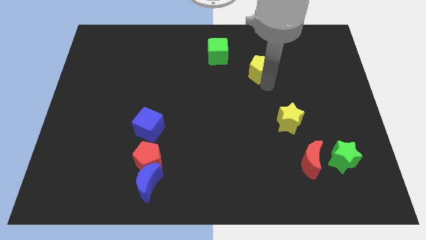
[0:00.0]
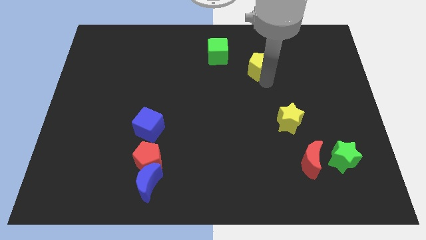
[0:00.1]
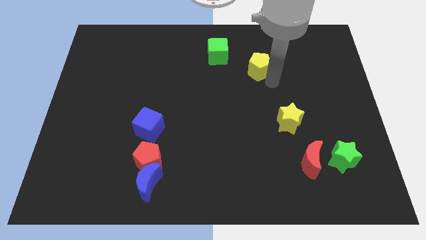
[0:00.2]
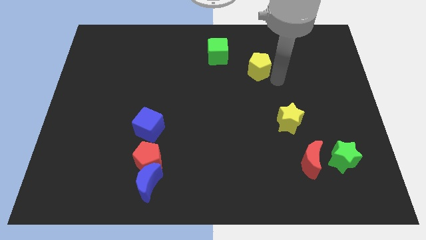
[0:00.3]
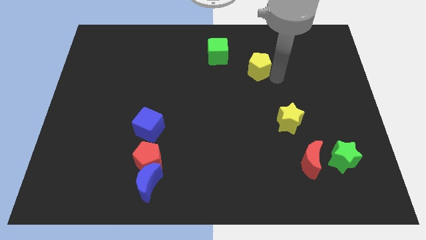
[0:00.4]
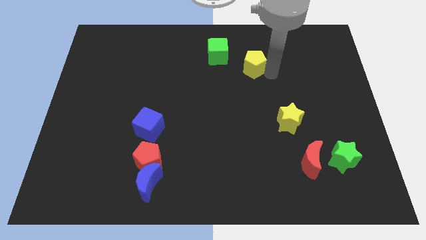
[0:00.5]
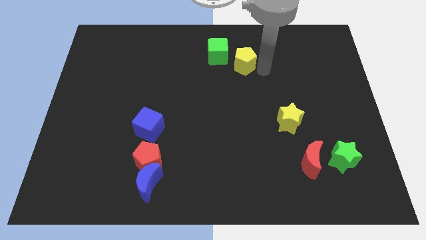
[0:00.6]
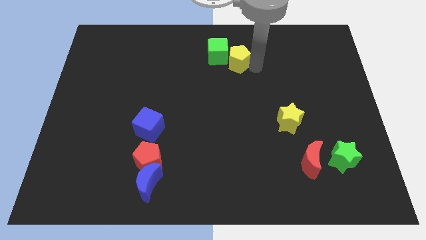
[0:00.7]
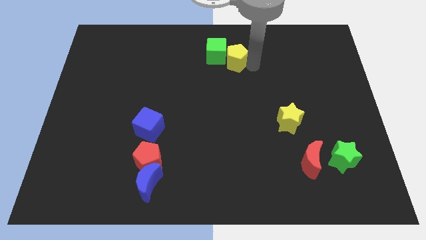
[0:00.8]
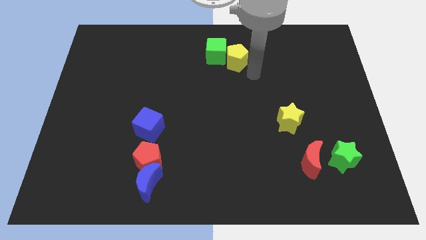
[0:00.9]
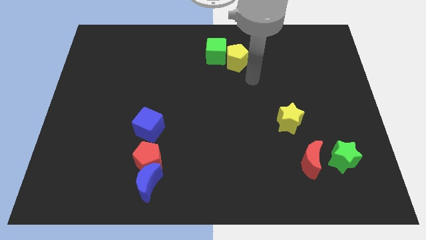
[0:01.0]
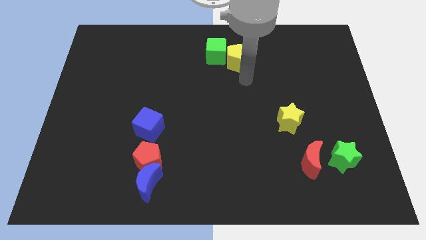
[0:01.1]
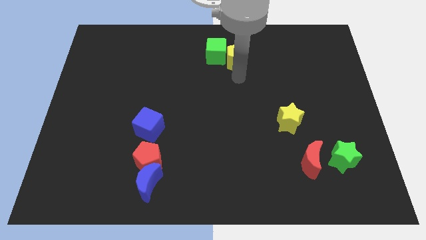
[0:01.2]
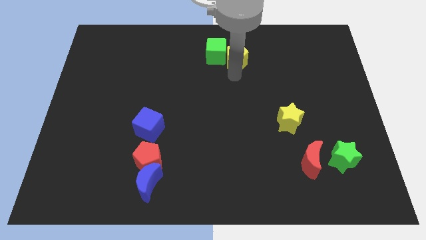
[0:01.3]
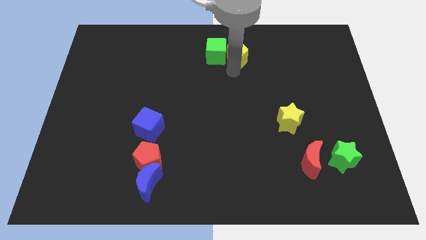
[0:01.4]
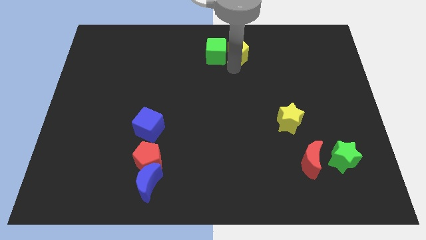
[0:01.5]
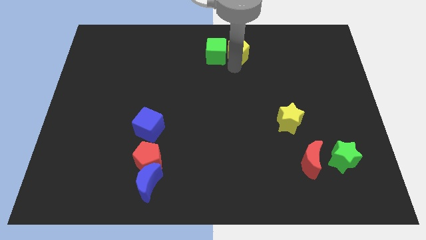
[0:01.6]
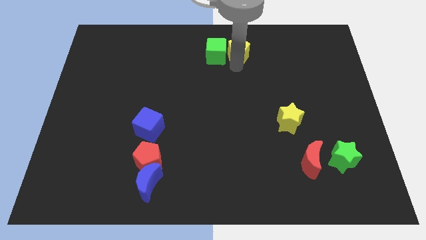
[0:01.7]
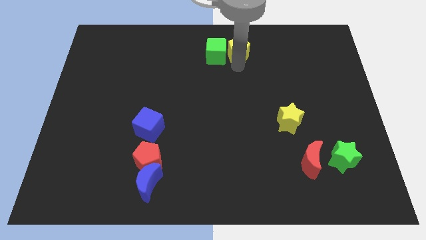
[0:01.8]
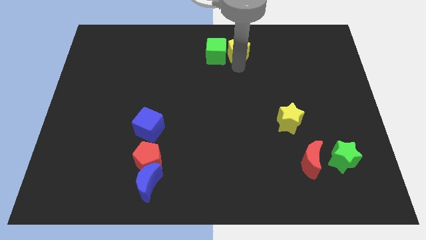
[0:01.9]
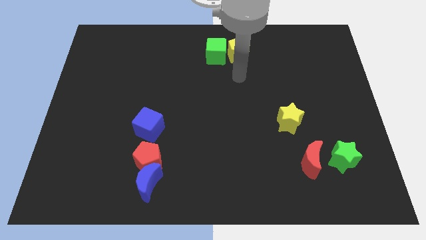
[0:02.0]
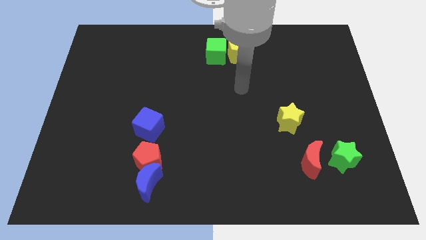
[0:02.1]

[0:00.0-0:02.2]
place the yellow pentagon right to the green cube

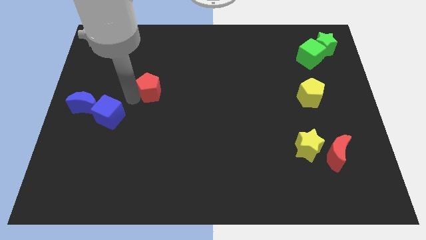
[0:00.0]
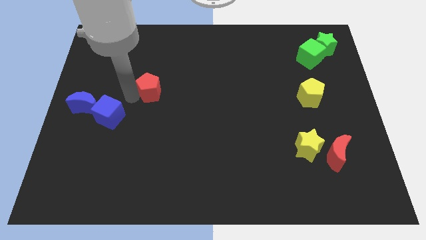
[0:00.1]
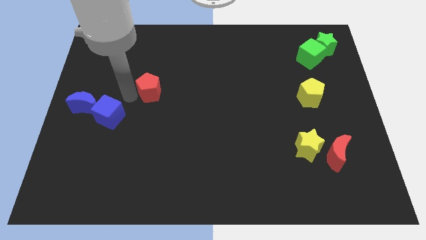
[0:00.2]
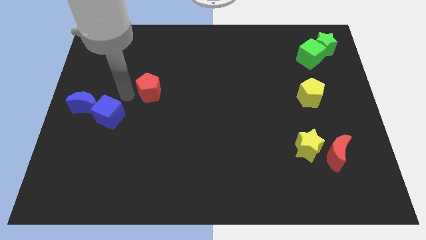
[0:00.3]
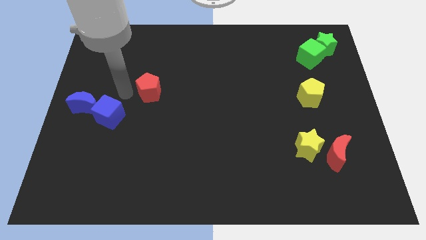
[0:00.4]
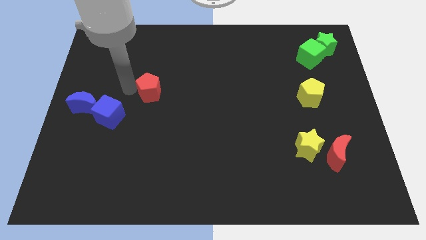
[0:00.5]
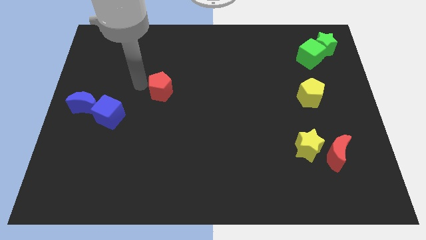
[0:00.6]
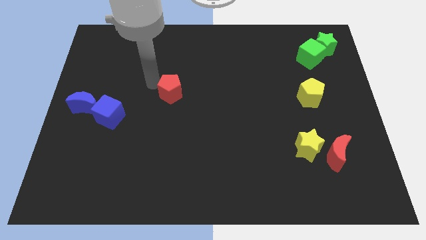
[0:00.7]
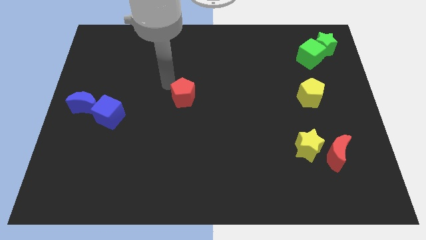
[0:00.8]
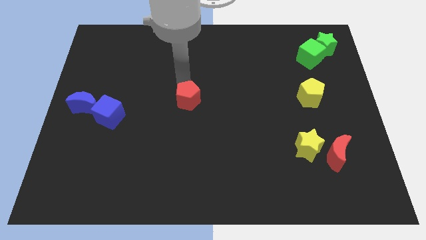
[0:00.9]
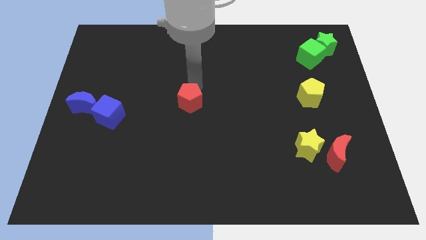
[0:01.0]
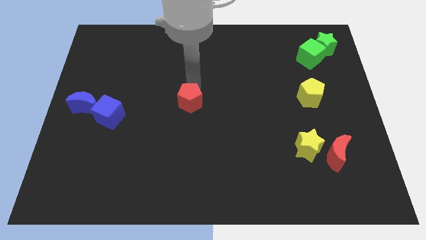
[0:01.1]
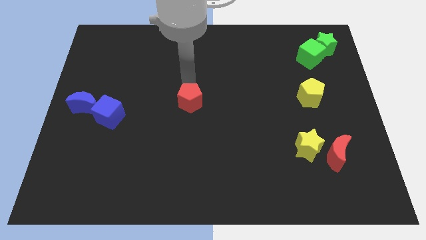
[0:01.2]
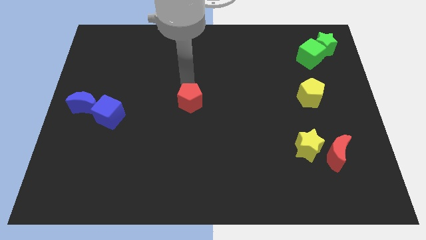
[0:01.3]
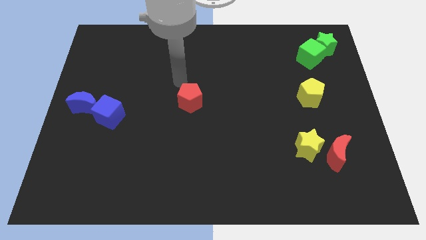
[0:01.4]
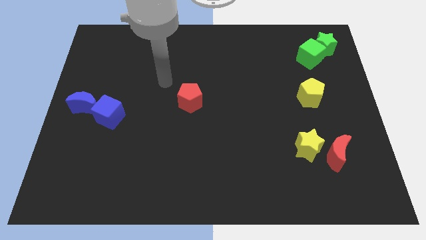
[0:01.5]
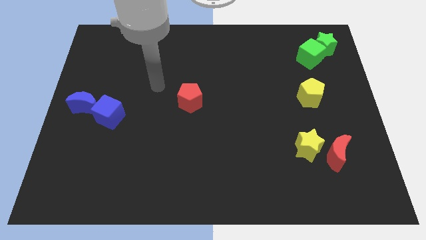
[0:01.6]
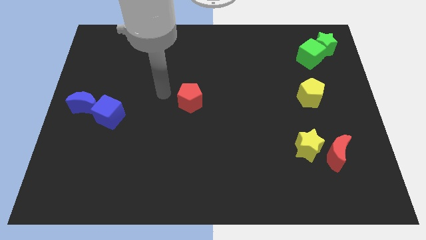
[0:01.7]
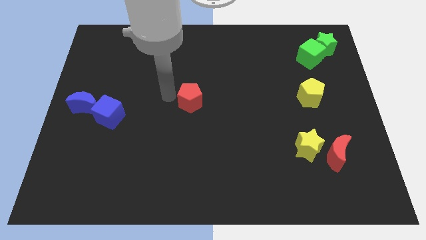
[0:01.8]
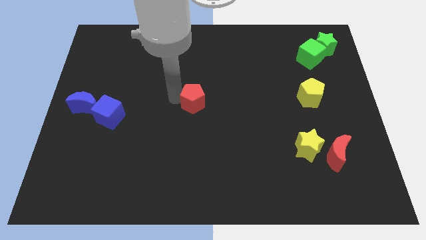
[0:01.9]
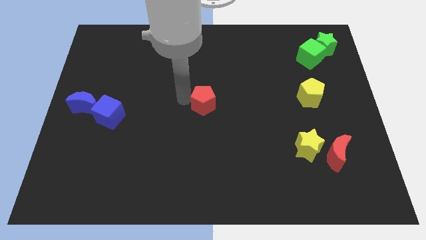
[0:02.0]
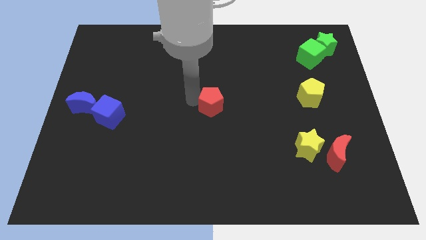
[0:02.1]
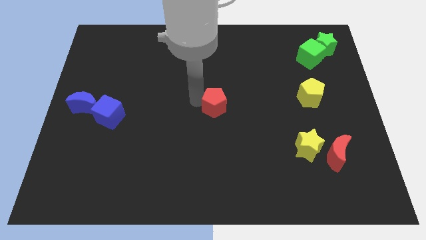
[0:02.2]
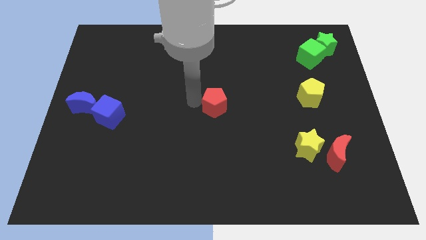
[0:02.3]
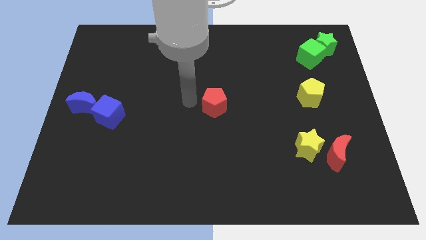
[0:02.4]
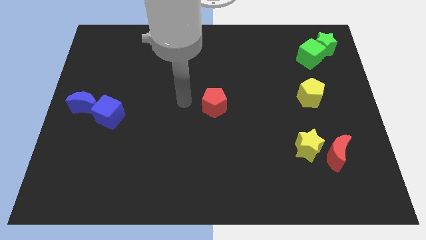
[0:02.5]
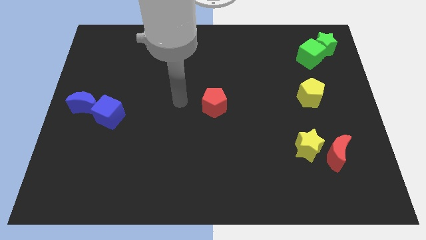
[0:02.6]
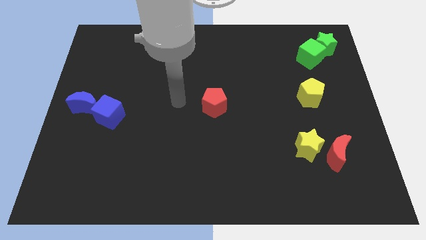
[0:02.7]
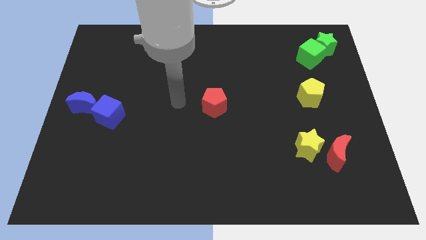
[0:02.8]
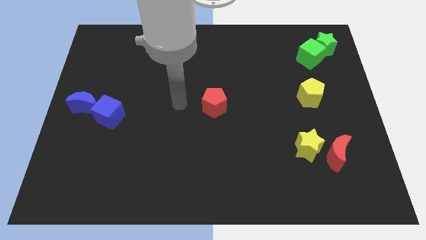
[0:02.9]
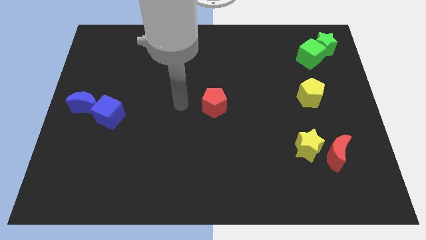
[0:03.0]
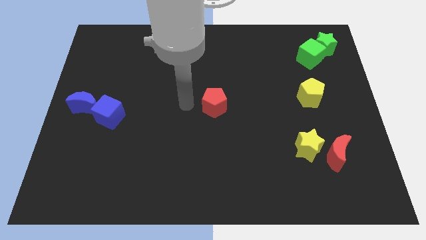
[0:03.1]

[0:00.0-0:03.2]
place the red crescent at center of the board

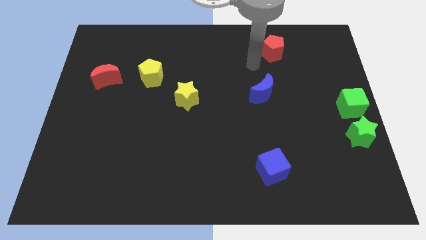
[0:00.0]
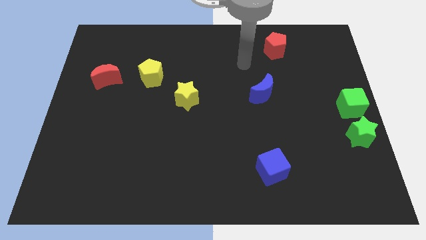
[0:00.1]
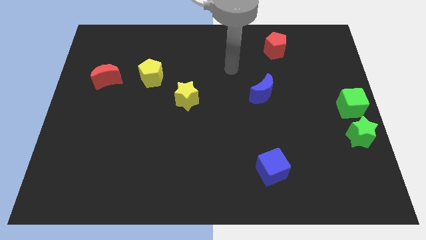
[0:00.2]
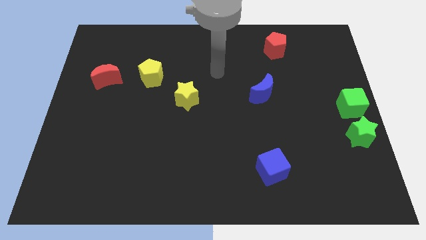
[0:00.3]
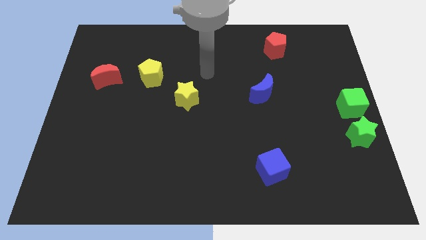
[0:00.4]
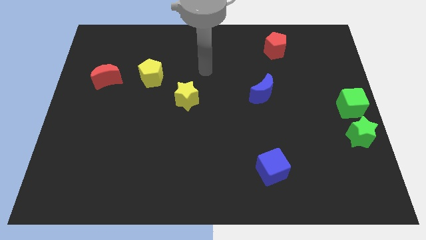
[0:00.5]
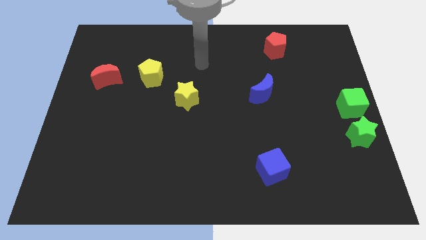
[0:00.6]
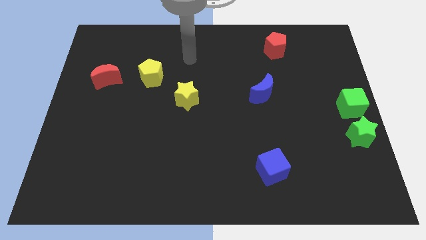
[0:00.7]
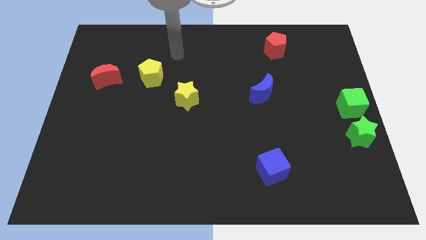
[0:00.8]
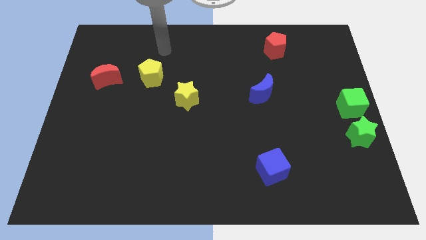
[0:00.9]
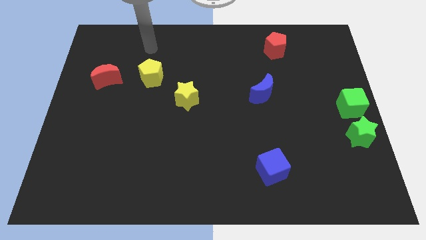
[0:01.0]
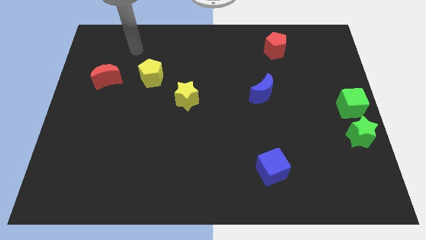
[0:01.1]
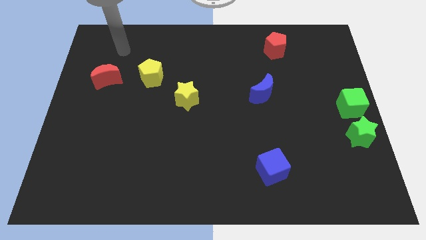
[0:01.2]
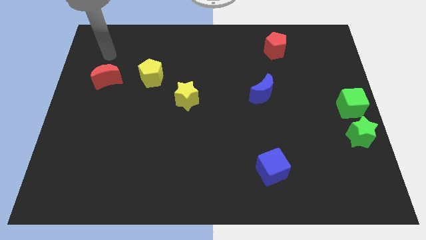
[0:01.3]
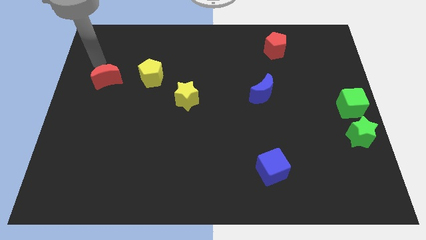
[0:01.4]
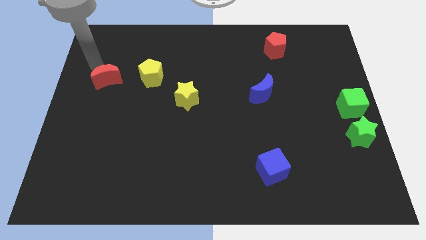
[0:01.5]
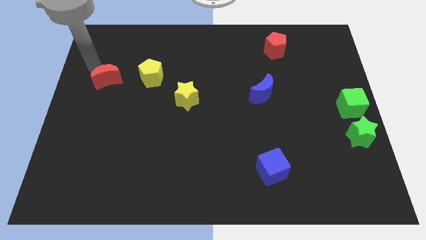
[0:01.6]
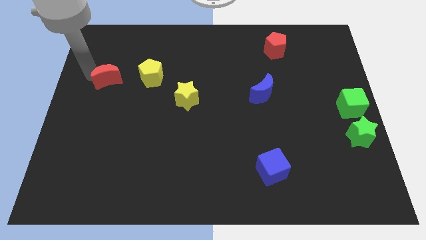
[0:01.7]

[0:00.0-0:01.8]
push the red pentagon to the top side of the blue moon

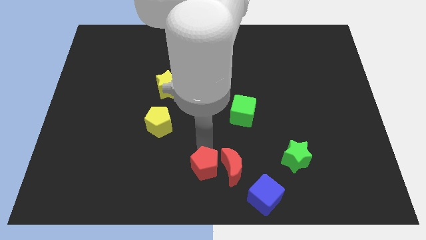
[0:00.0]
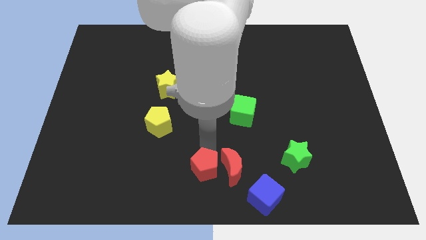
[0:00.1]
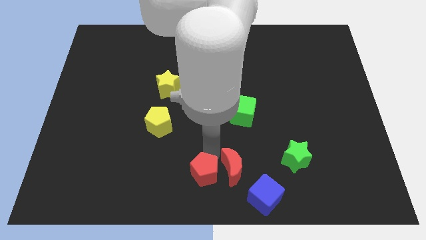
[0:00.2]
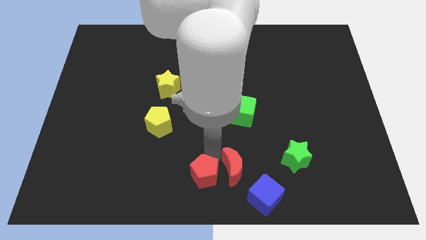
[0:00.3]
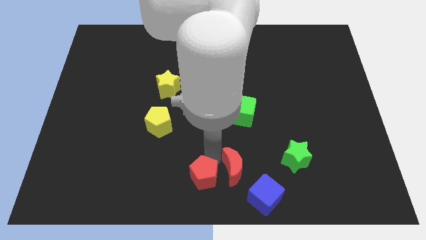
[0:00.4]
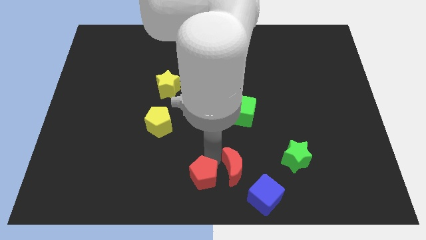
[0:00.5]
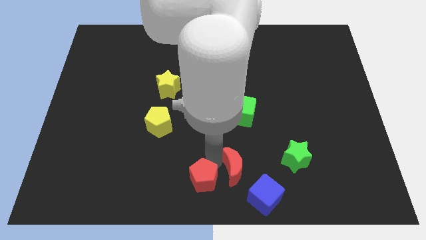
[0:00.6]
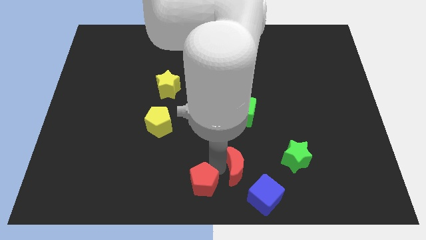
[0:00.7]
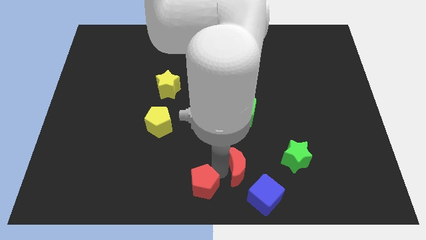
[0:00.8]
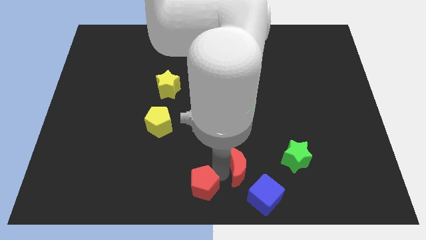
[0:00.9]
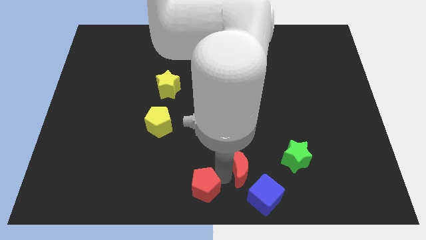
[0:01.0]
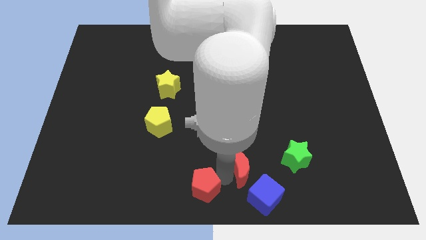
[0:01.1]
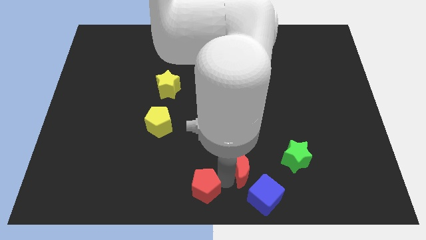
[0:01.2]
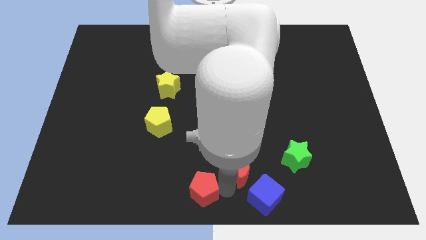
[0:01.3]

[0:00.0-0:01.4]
place red pentagon slightly below

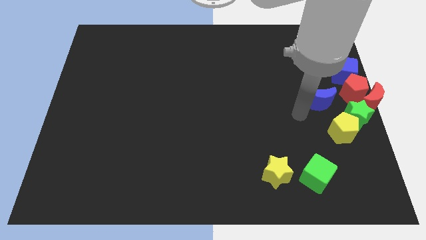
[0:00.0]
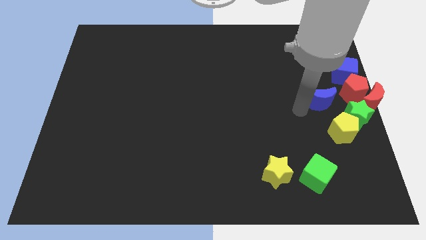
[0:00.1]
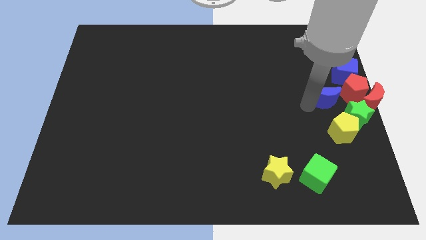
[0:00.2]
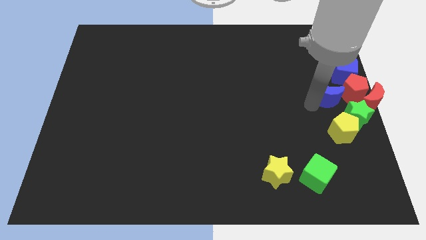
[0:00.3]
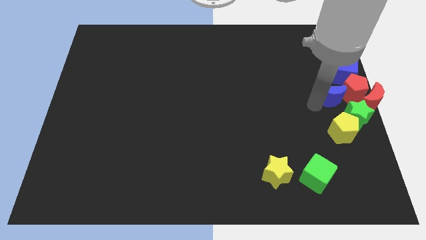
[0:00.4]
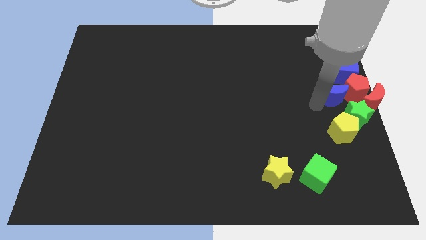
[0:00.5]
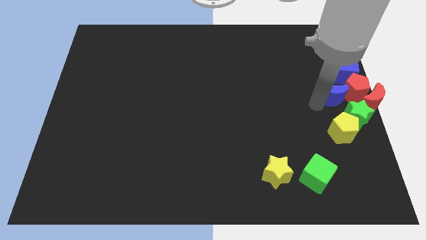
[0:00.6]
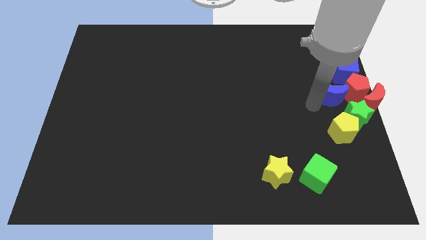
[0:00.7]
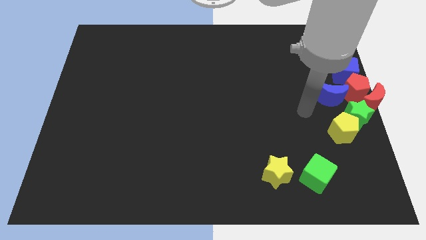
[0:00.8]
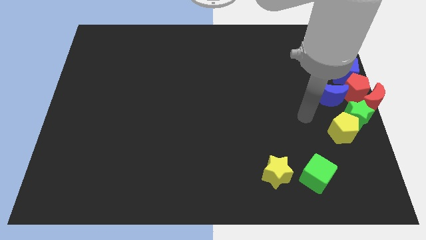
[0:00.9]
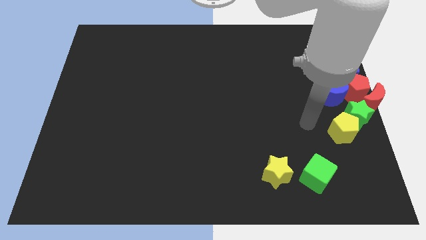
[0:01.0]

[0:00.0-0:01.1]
push blue moon into red pentagon
